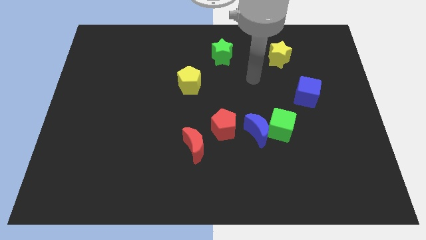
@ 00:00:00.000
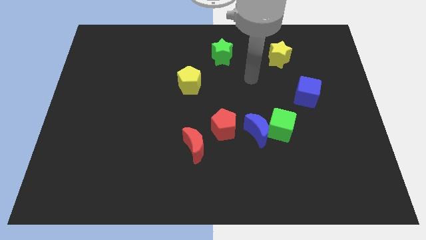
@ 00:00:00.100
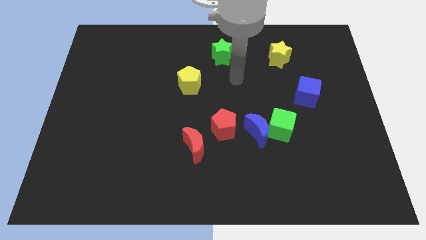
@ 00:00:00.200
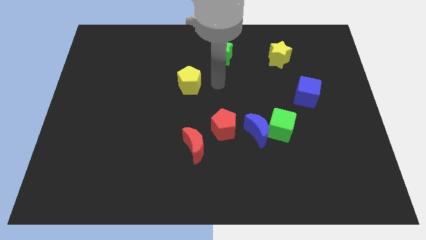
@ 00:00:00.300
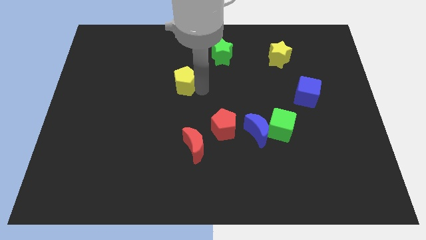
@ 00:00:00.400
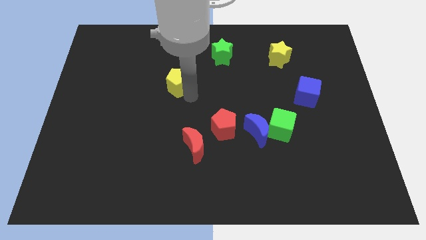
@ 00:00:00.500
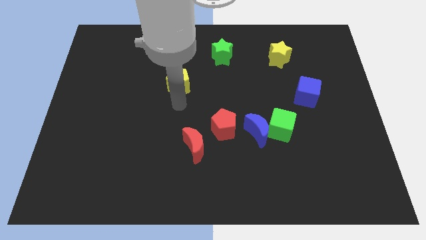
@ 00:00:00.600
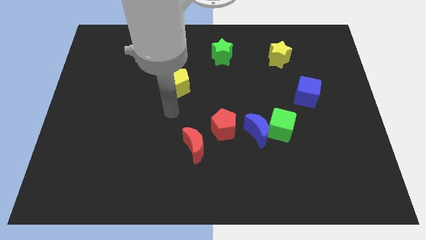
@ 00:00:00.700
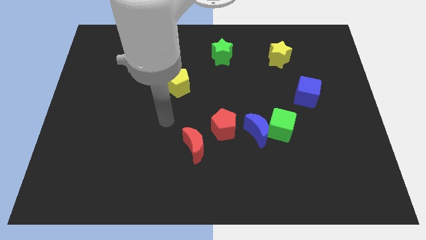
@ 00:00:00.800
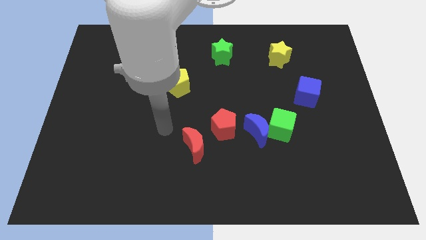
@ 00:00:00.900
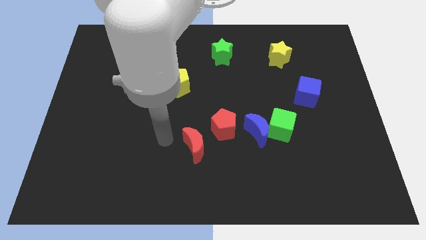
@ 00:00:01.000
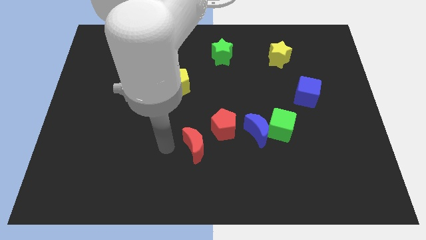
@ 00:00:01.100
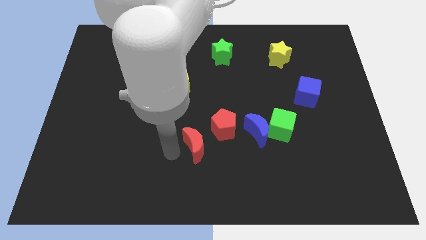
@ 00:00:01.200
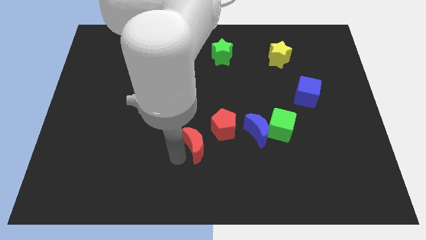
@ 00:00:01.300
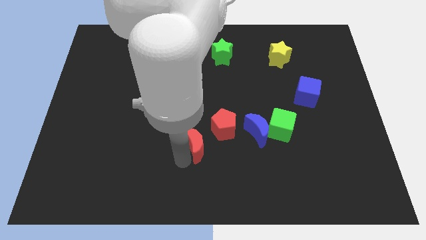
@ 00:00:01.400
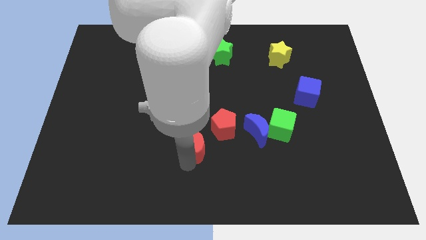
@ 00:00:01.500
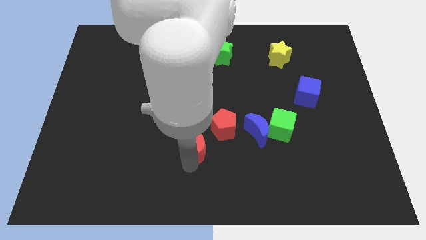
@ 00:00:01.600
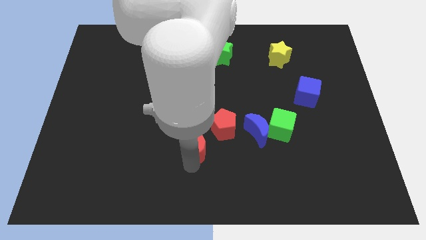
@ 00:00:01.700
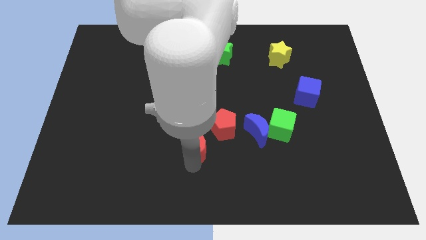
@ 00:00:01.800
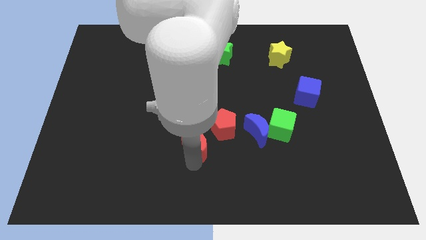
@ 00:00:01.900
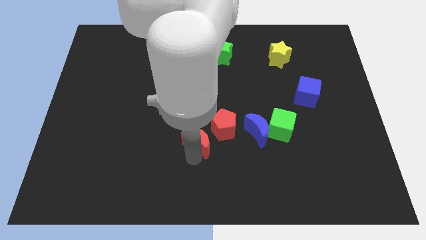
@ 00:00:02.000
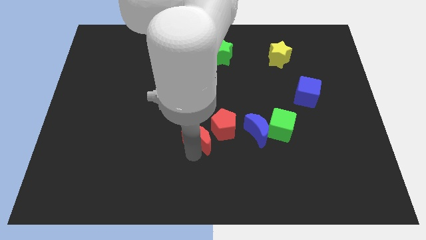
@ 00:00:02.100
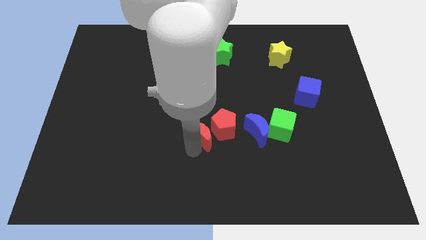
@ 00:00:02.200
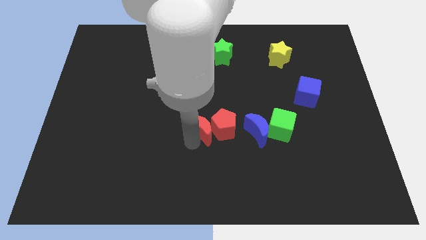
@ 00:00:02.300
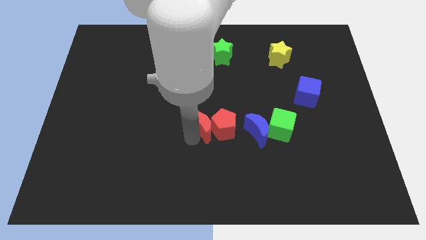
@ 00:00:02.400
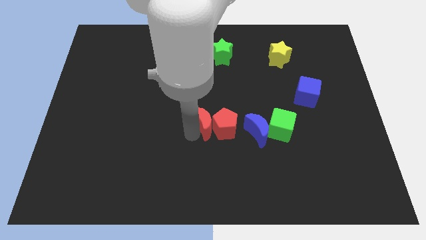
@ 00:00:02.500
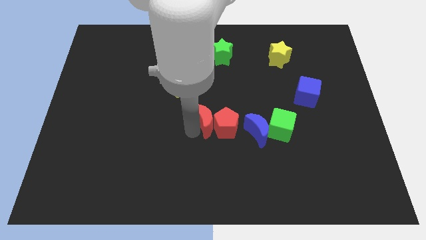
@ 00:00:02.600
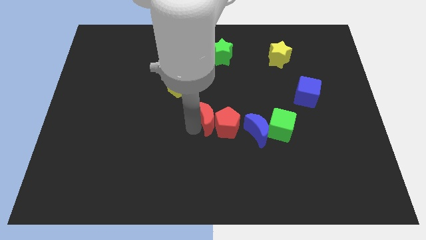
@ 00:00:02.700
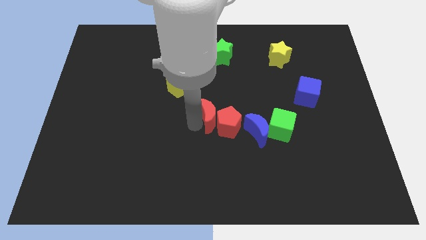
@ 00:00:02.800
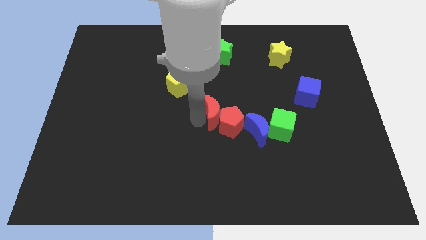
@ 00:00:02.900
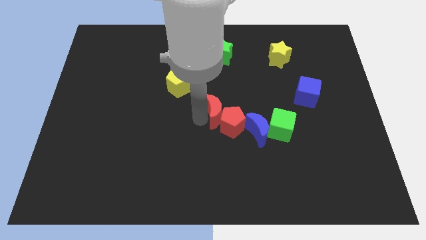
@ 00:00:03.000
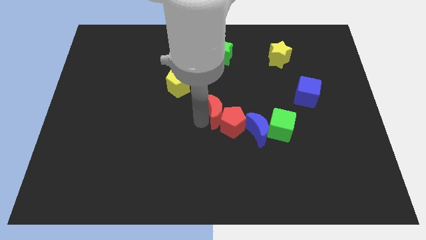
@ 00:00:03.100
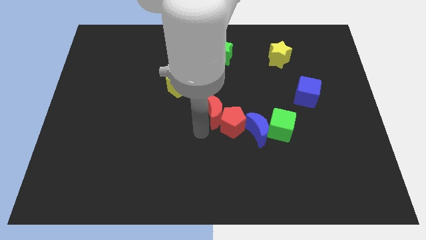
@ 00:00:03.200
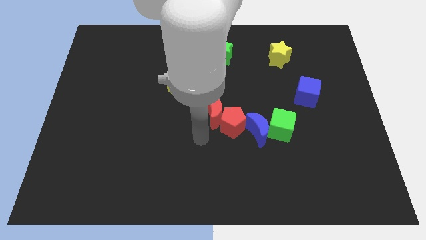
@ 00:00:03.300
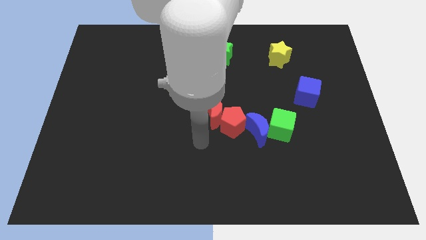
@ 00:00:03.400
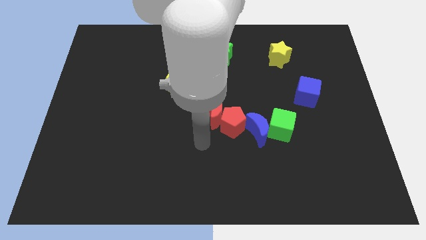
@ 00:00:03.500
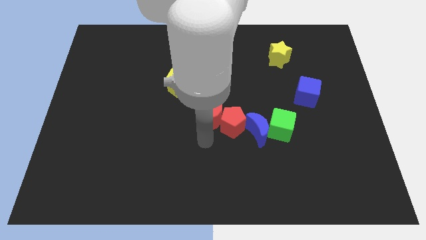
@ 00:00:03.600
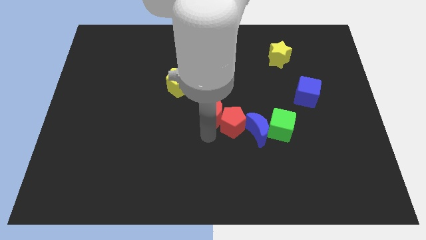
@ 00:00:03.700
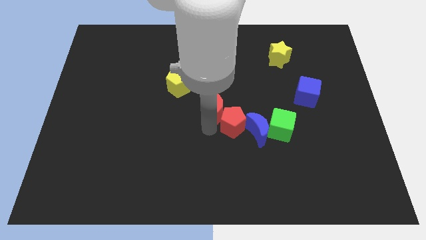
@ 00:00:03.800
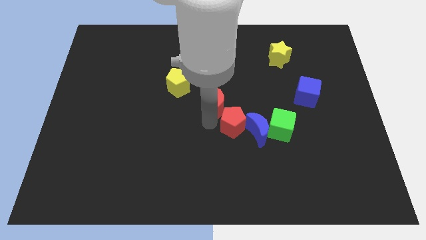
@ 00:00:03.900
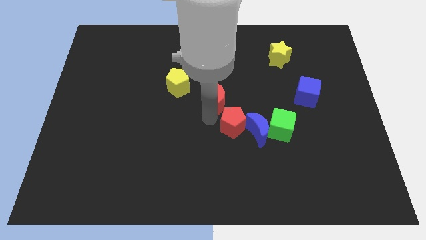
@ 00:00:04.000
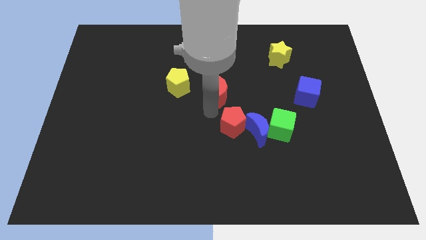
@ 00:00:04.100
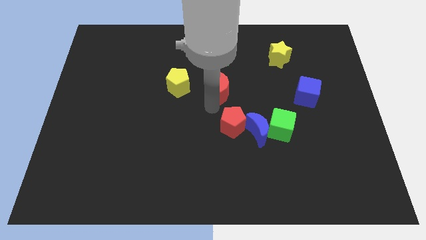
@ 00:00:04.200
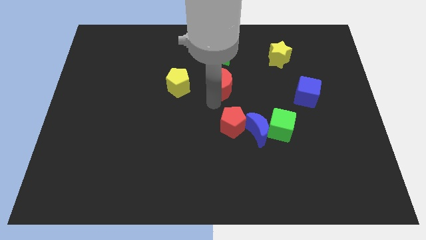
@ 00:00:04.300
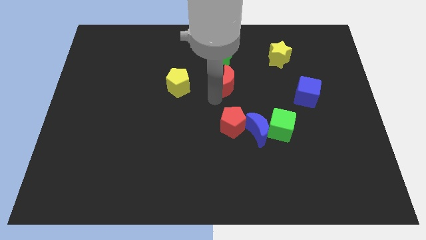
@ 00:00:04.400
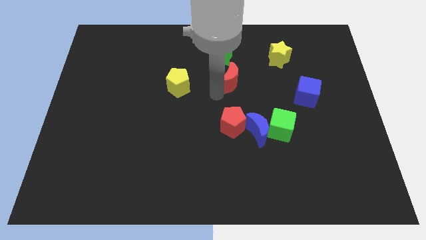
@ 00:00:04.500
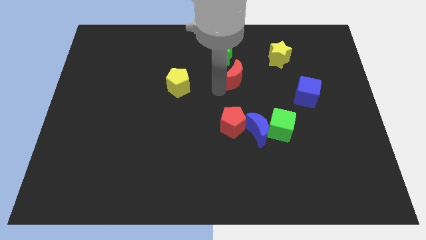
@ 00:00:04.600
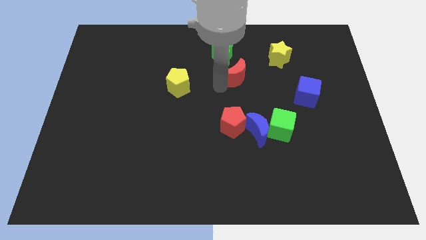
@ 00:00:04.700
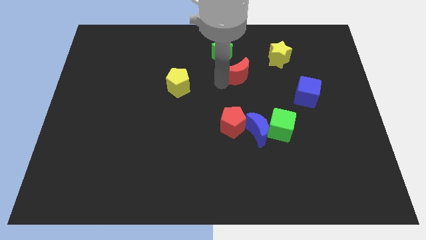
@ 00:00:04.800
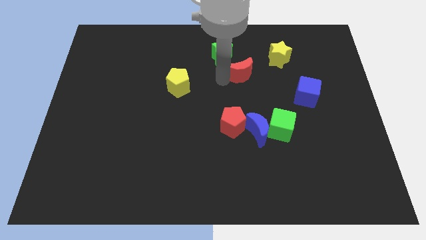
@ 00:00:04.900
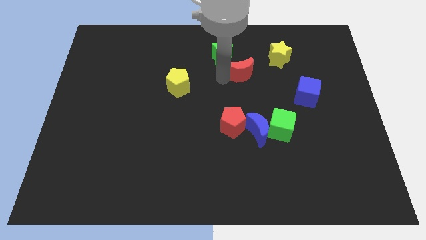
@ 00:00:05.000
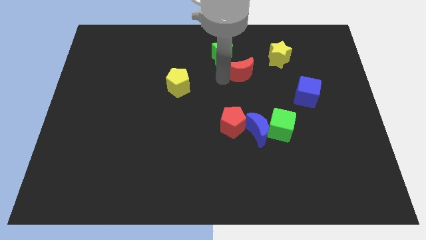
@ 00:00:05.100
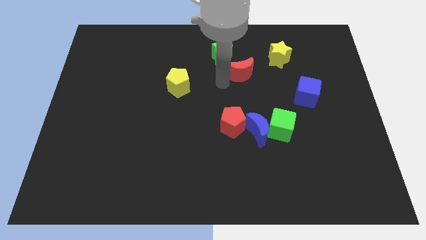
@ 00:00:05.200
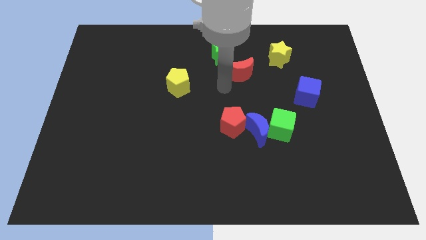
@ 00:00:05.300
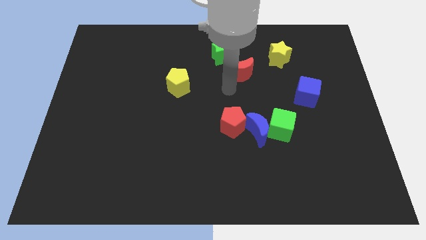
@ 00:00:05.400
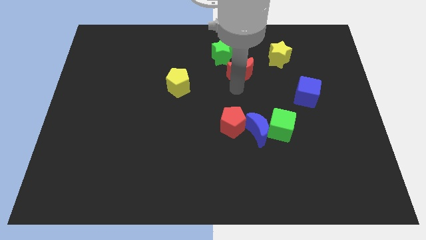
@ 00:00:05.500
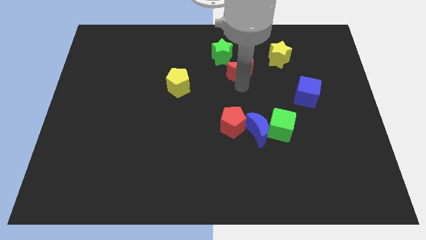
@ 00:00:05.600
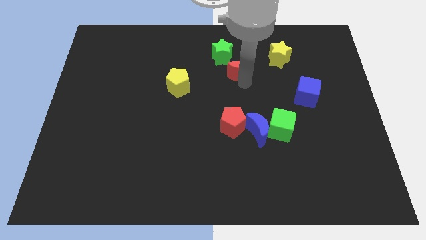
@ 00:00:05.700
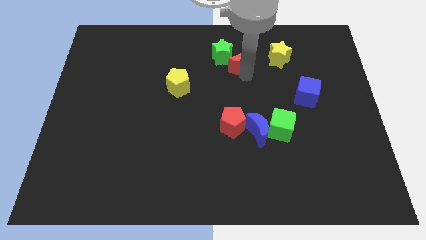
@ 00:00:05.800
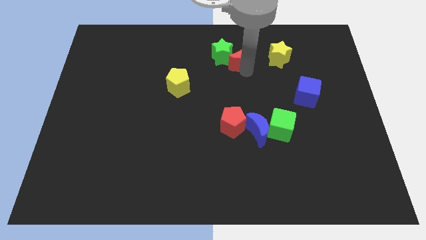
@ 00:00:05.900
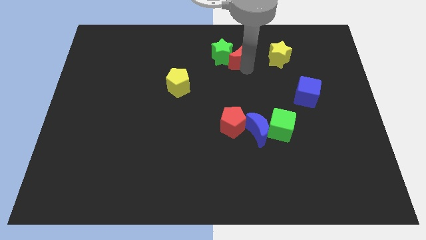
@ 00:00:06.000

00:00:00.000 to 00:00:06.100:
push the red moon to the green star

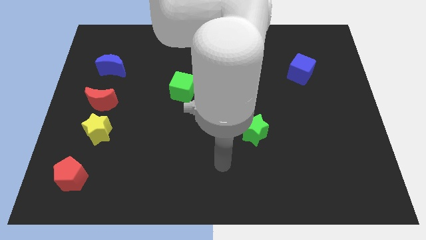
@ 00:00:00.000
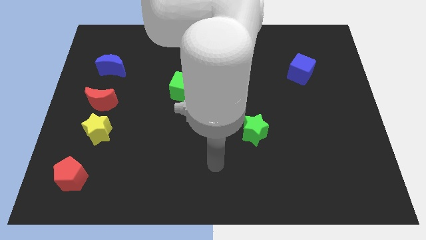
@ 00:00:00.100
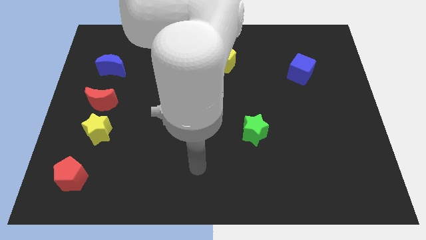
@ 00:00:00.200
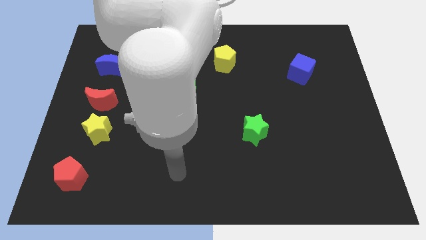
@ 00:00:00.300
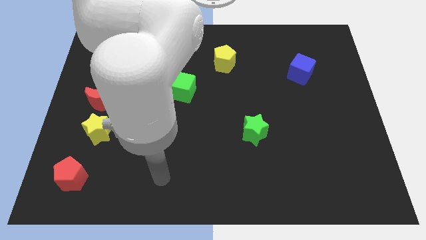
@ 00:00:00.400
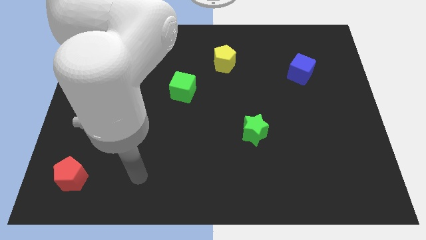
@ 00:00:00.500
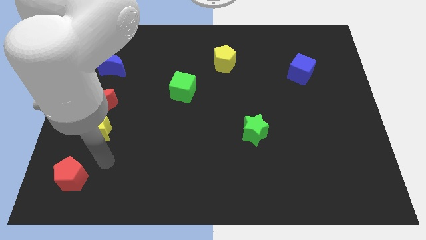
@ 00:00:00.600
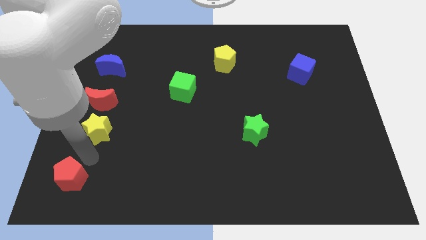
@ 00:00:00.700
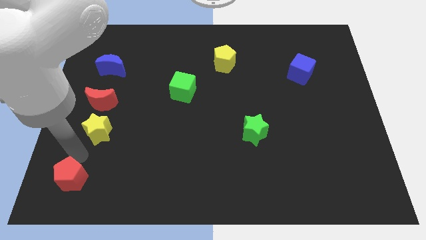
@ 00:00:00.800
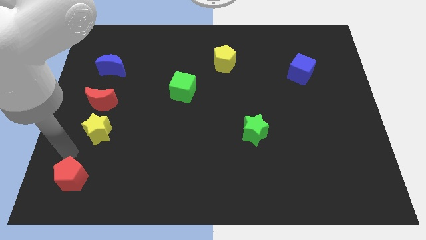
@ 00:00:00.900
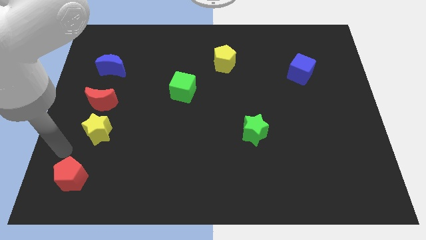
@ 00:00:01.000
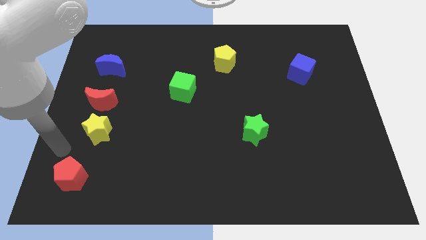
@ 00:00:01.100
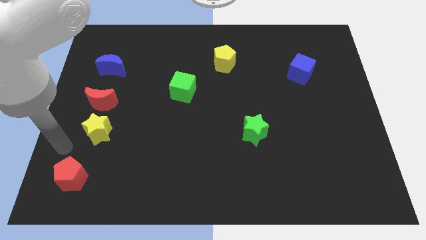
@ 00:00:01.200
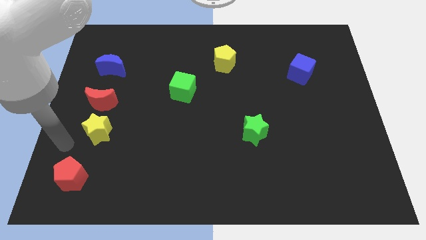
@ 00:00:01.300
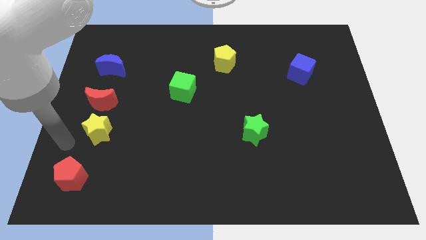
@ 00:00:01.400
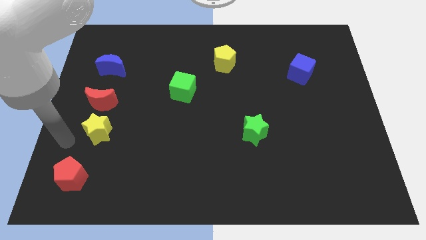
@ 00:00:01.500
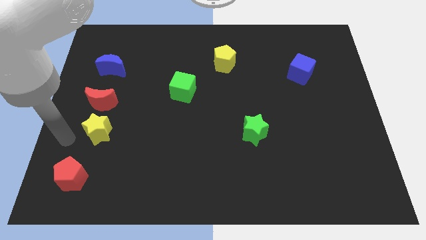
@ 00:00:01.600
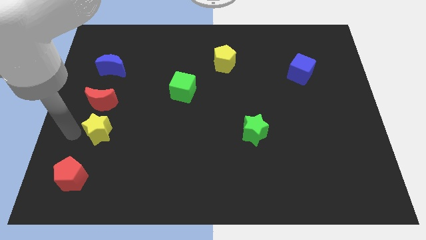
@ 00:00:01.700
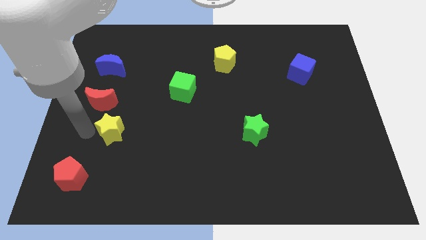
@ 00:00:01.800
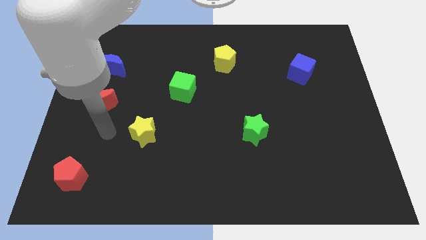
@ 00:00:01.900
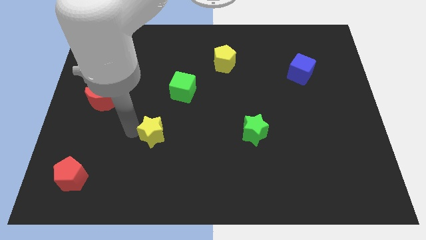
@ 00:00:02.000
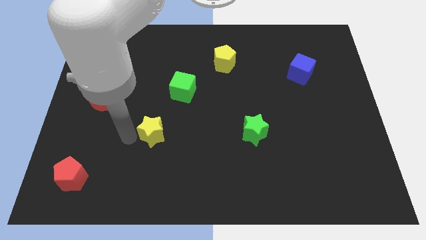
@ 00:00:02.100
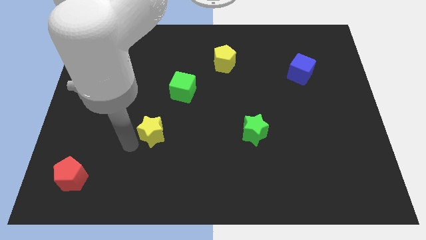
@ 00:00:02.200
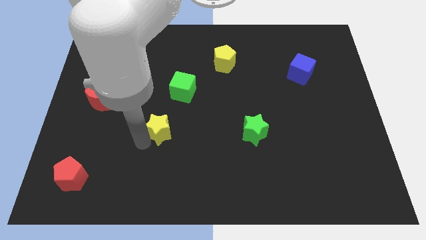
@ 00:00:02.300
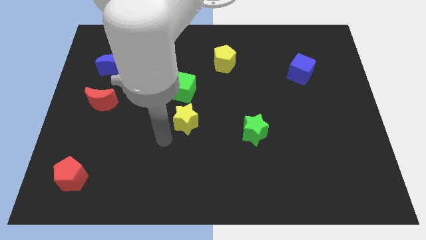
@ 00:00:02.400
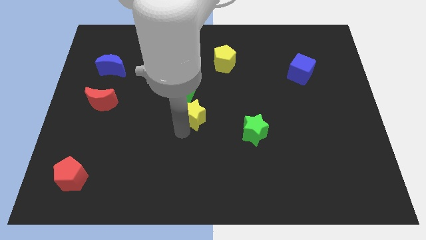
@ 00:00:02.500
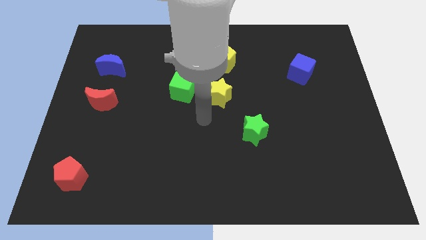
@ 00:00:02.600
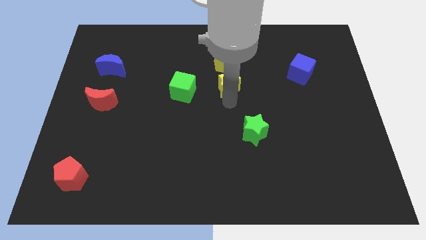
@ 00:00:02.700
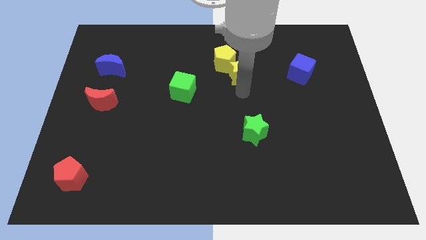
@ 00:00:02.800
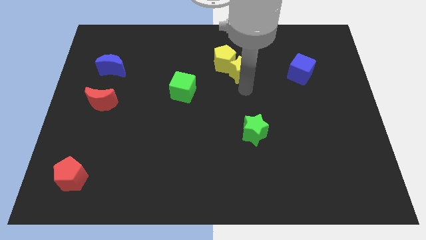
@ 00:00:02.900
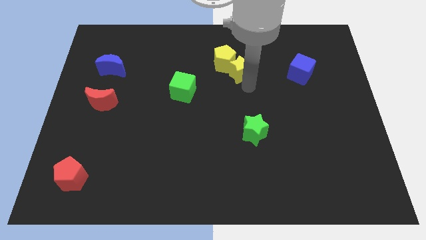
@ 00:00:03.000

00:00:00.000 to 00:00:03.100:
move the yellow star next to the yellow pentagon
